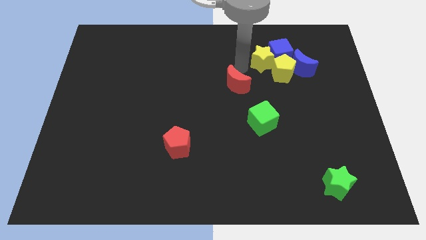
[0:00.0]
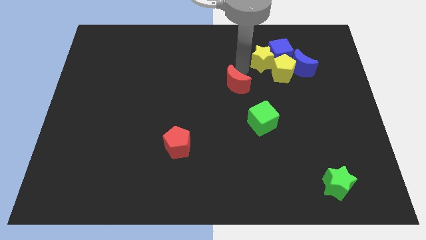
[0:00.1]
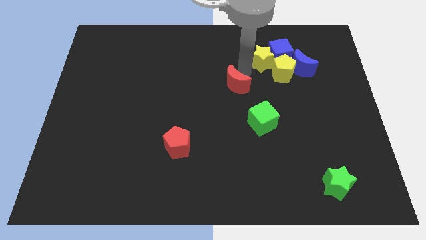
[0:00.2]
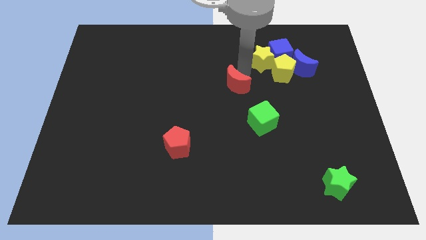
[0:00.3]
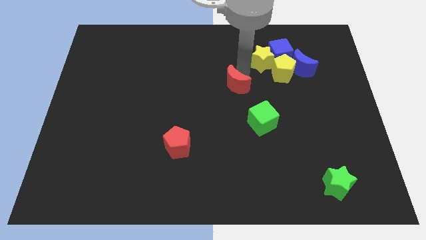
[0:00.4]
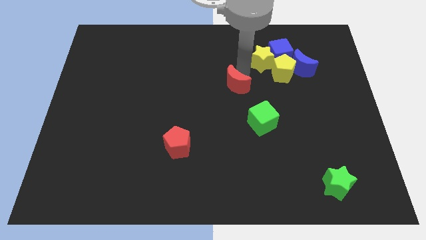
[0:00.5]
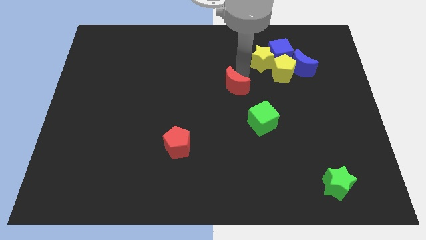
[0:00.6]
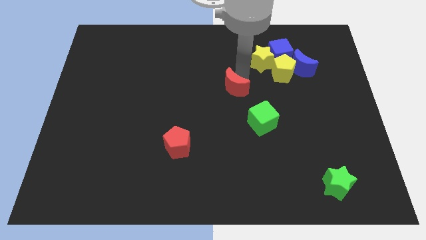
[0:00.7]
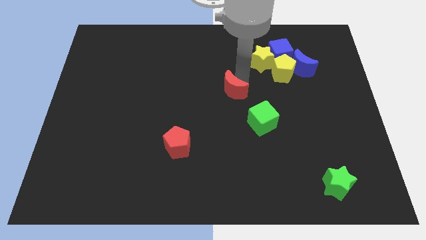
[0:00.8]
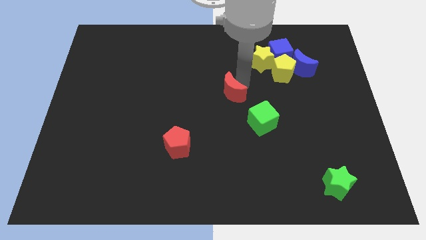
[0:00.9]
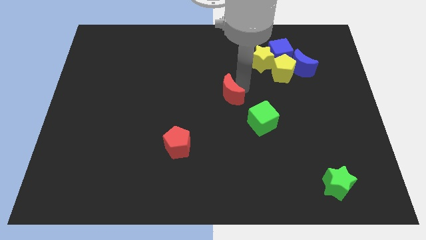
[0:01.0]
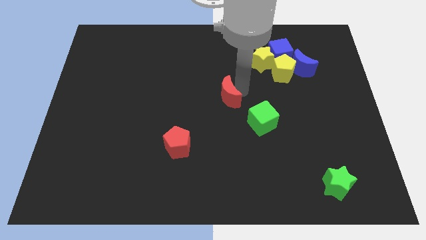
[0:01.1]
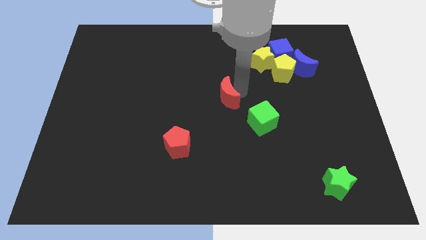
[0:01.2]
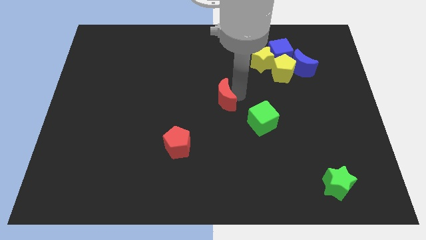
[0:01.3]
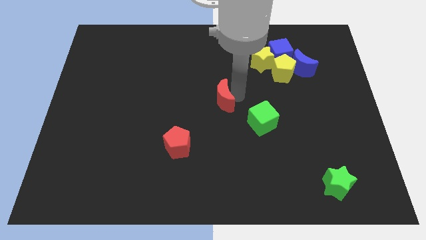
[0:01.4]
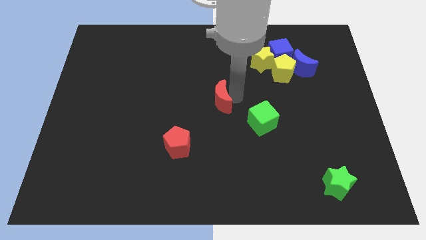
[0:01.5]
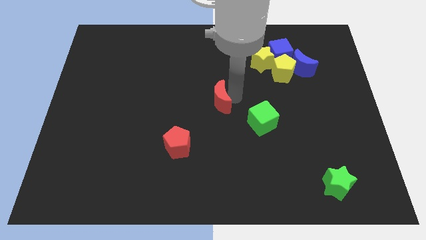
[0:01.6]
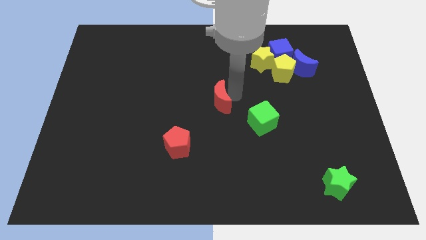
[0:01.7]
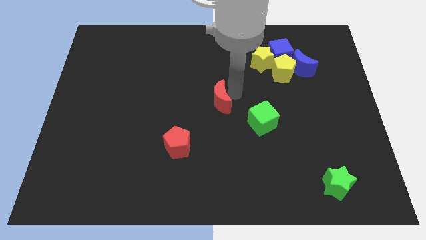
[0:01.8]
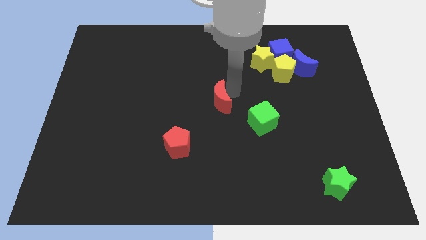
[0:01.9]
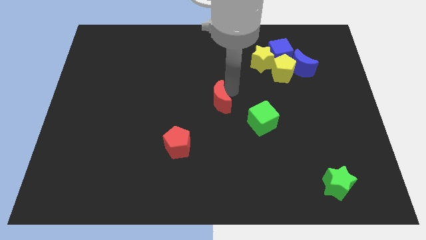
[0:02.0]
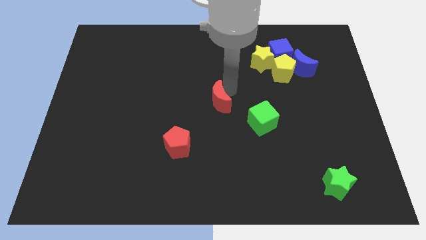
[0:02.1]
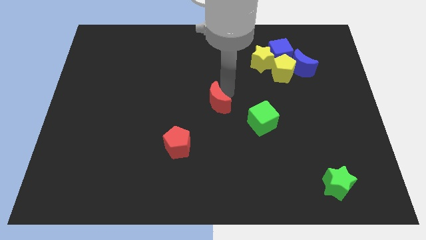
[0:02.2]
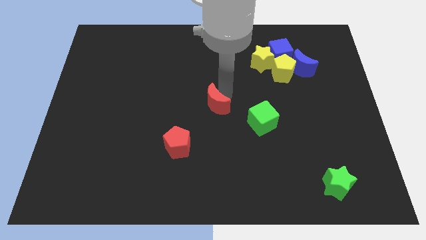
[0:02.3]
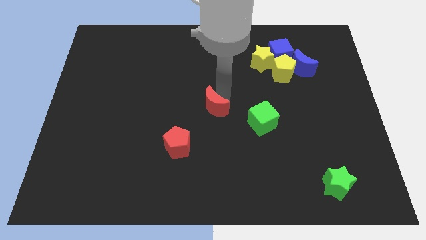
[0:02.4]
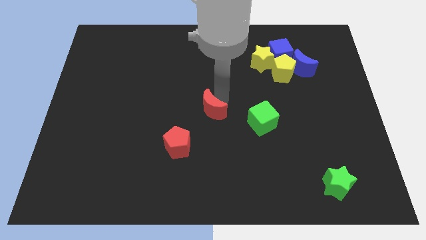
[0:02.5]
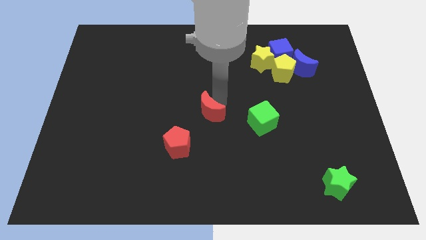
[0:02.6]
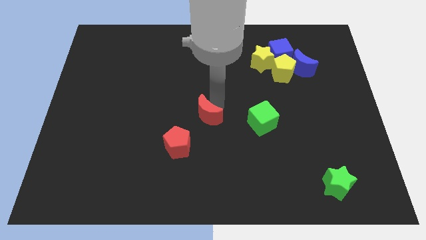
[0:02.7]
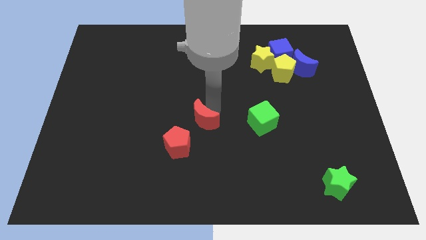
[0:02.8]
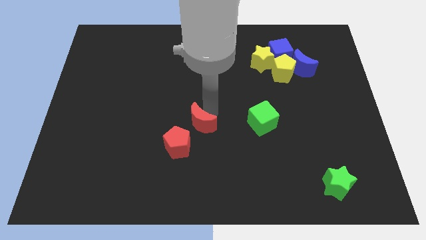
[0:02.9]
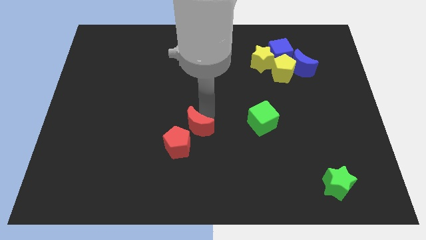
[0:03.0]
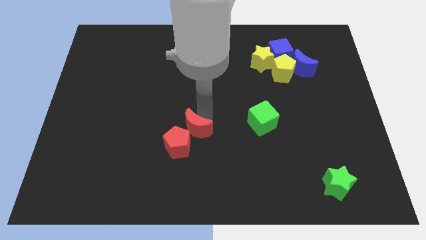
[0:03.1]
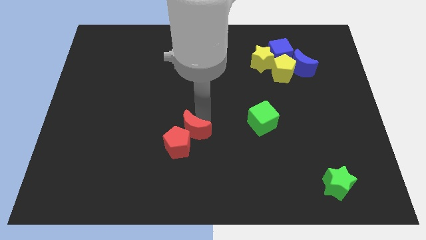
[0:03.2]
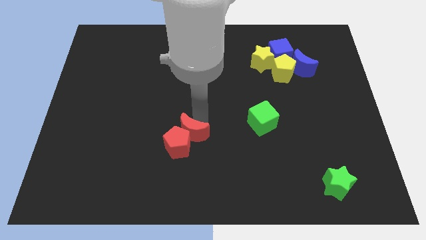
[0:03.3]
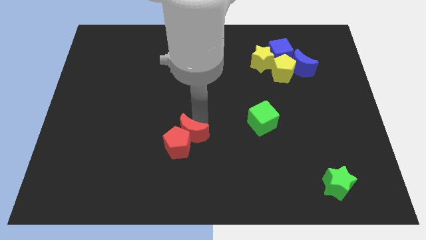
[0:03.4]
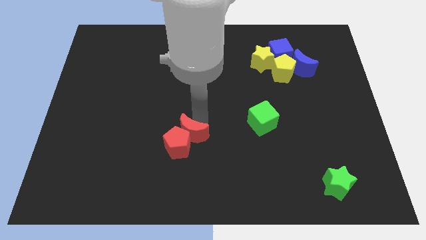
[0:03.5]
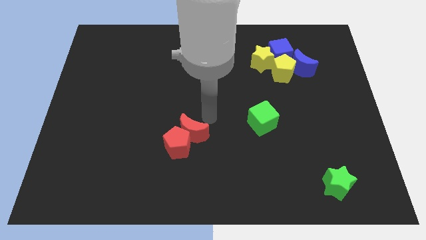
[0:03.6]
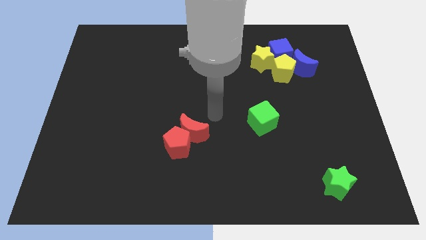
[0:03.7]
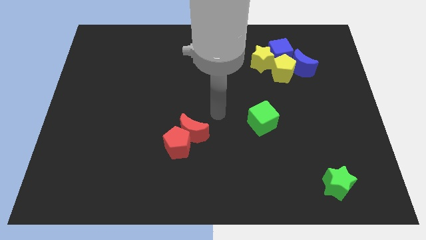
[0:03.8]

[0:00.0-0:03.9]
slide the red moon into the red pentagon

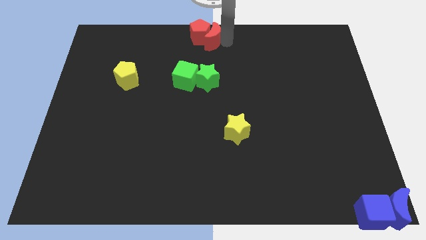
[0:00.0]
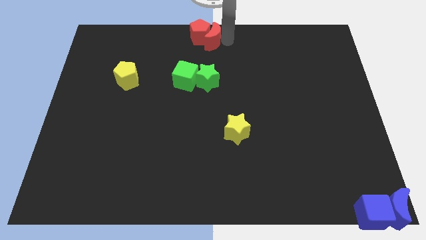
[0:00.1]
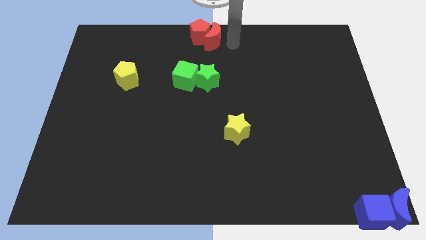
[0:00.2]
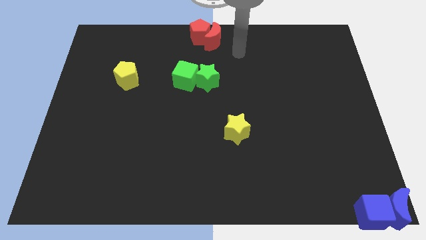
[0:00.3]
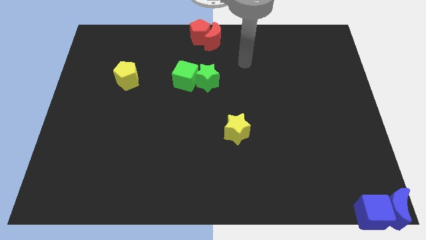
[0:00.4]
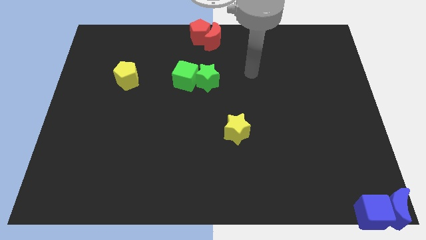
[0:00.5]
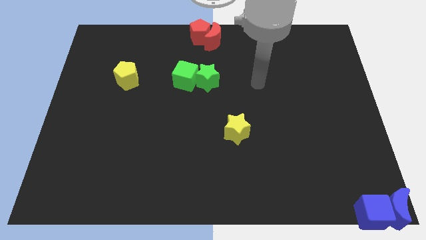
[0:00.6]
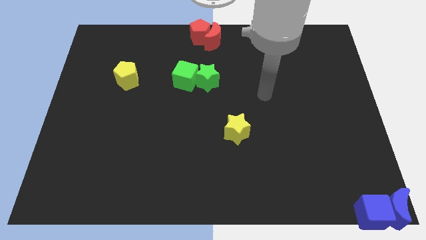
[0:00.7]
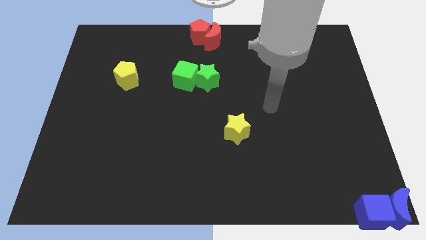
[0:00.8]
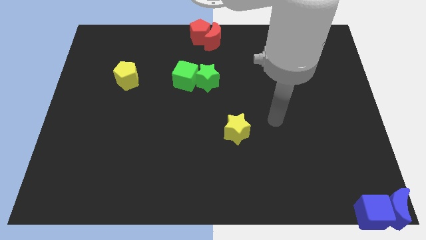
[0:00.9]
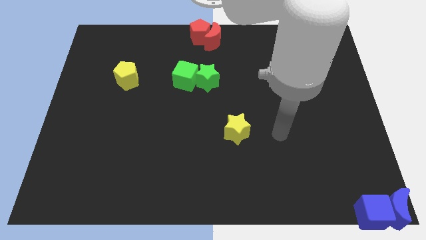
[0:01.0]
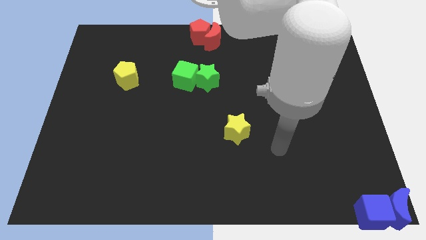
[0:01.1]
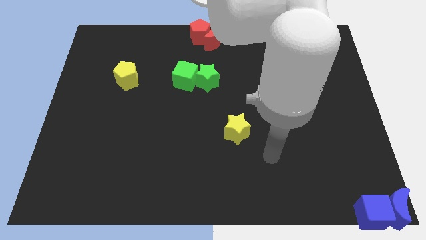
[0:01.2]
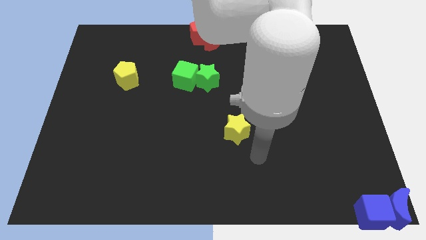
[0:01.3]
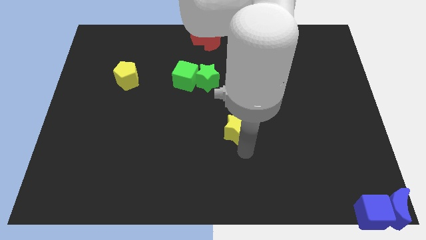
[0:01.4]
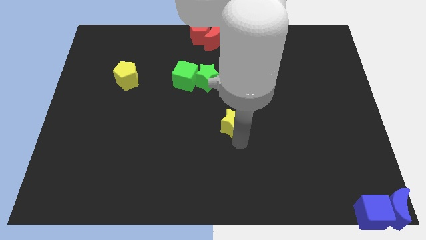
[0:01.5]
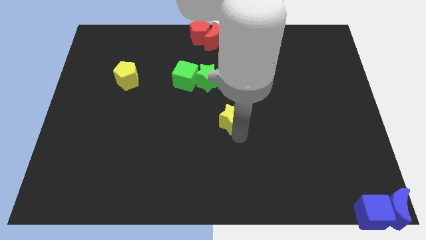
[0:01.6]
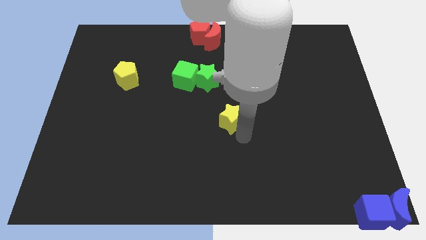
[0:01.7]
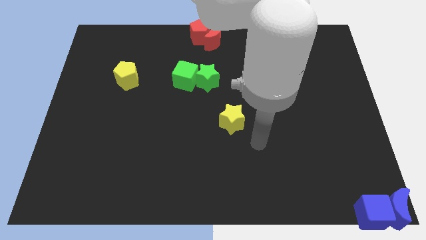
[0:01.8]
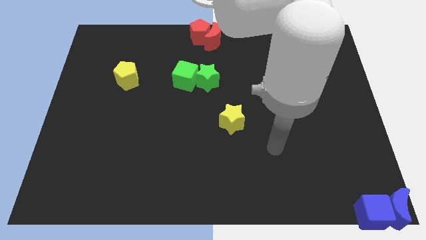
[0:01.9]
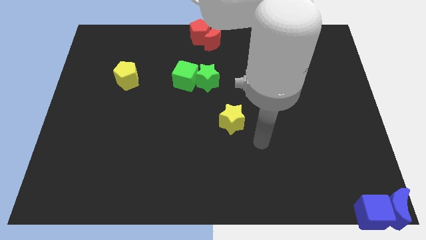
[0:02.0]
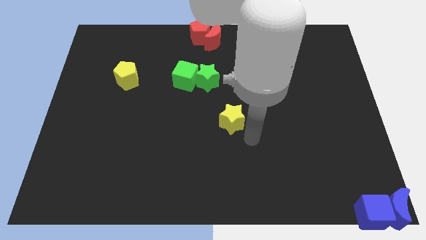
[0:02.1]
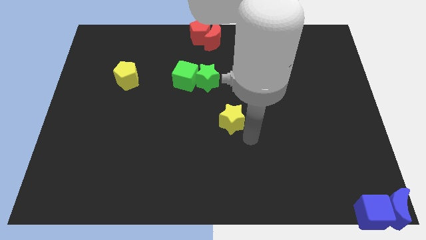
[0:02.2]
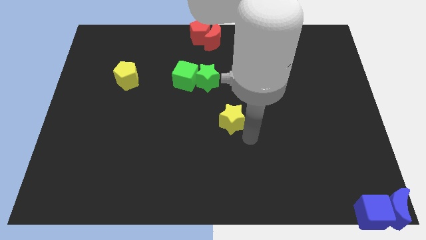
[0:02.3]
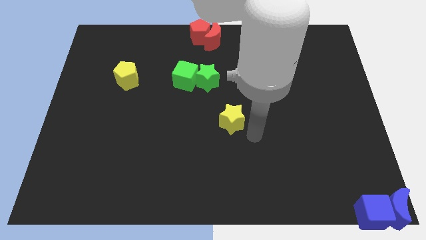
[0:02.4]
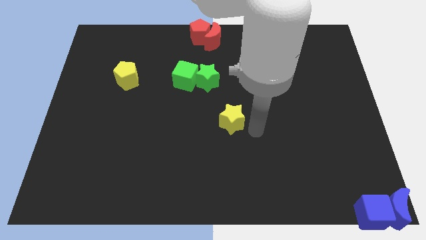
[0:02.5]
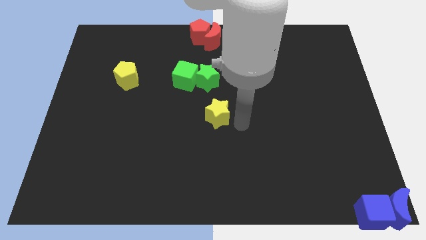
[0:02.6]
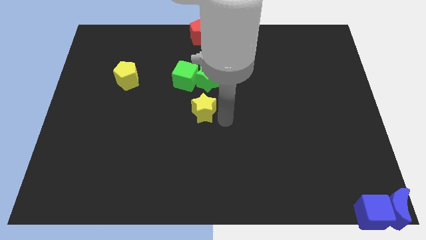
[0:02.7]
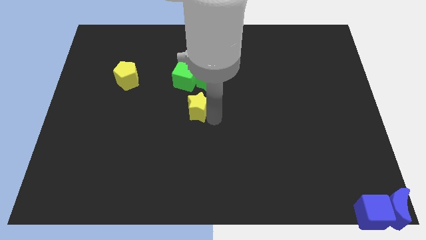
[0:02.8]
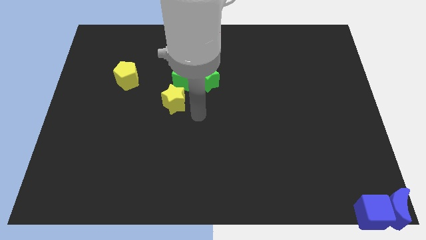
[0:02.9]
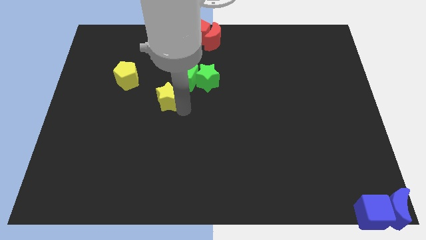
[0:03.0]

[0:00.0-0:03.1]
move yellow star towards the yellow pentagon

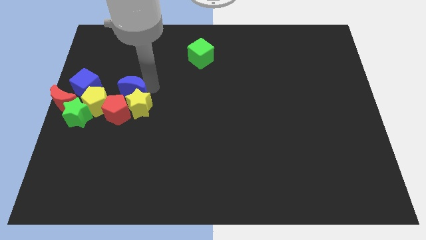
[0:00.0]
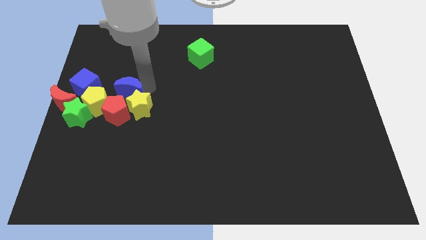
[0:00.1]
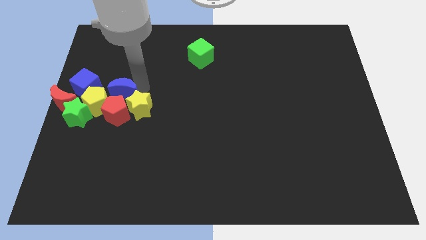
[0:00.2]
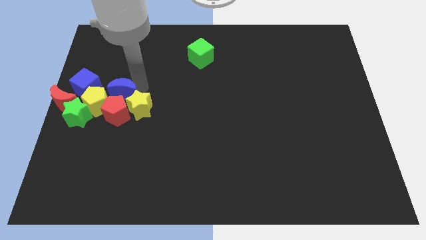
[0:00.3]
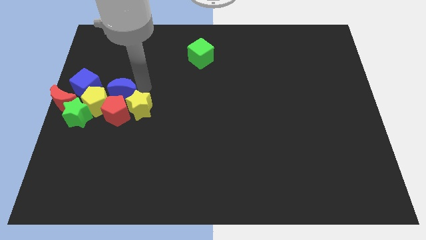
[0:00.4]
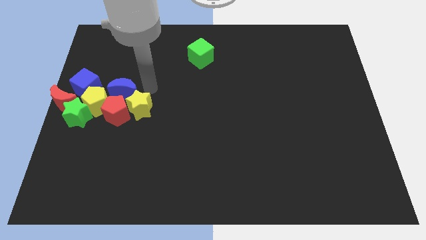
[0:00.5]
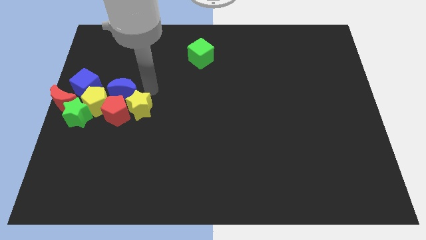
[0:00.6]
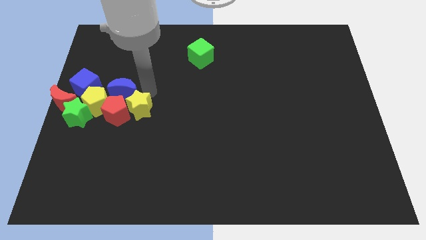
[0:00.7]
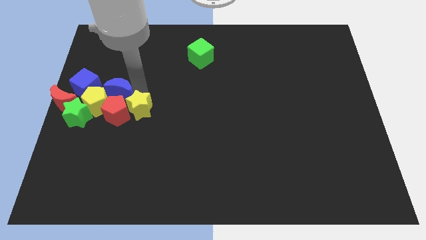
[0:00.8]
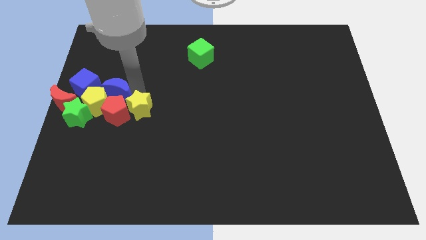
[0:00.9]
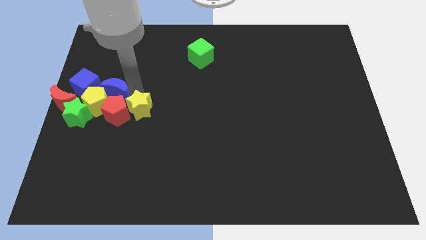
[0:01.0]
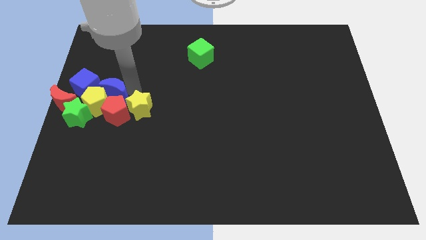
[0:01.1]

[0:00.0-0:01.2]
slightly move the blue crescent to the top of the yellow pentagon

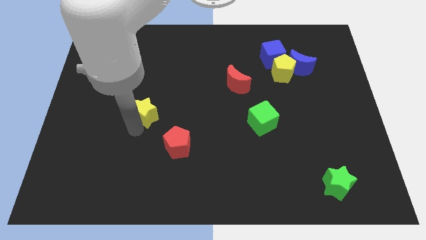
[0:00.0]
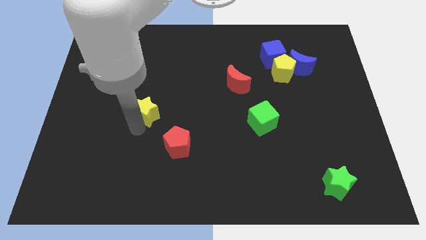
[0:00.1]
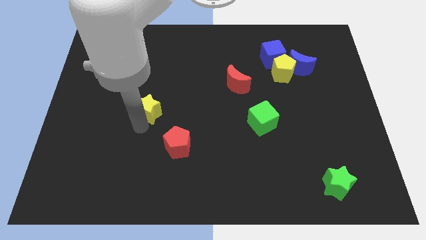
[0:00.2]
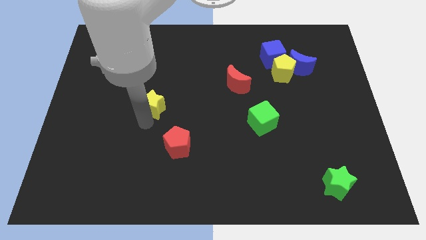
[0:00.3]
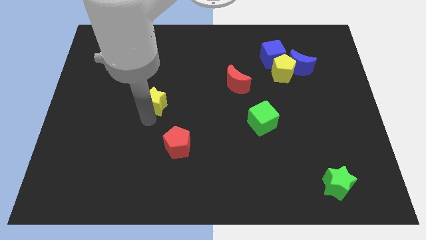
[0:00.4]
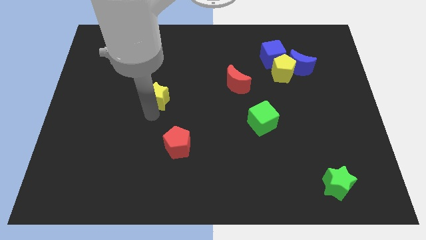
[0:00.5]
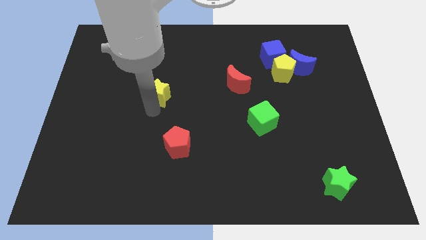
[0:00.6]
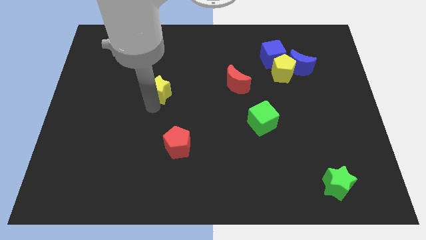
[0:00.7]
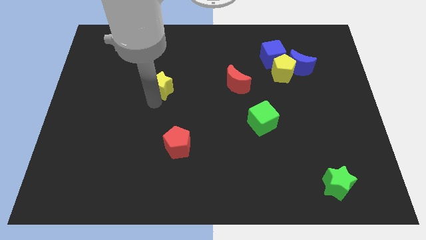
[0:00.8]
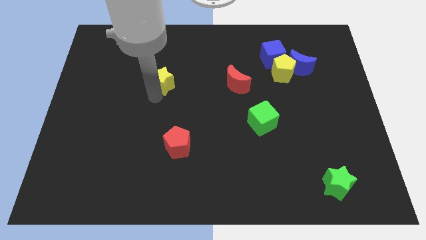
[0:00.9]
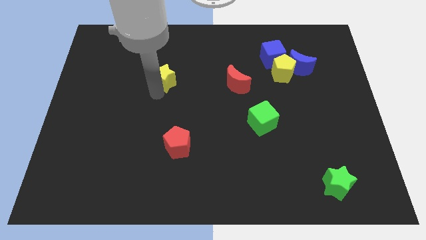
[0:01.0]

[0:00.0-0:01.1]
move the yellow star to the left of the red crescent
